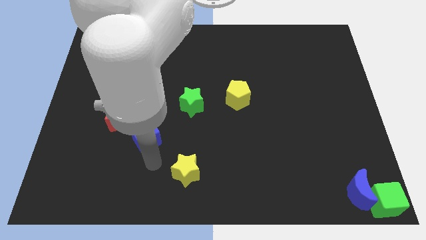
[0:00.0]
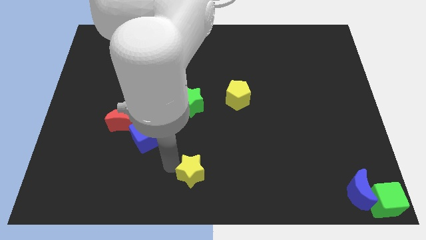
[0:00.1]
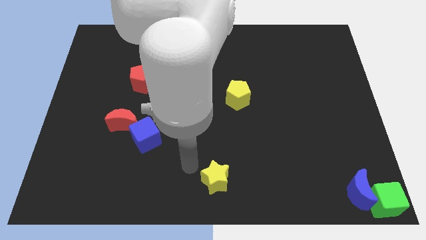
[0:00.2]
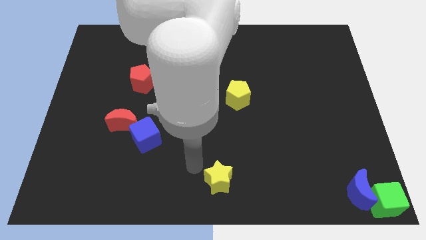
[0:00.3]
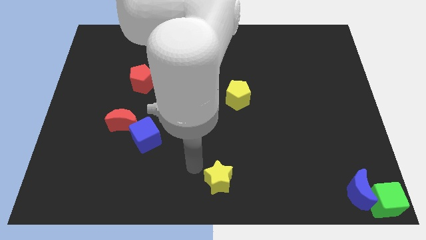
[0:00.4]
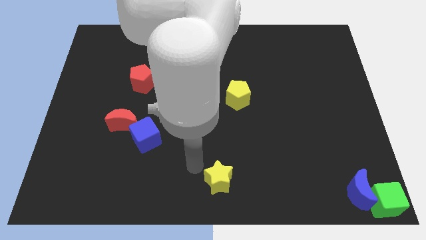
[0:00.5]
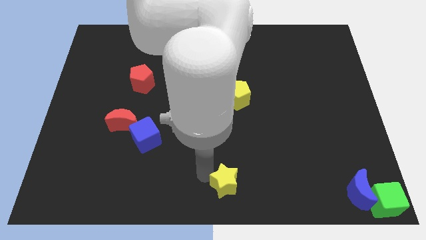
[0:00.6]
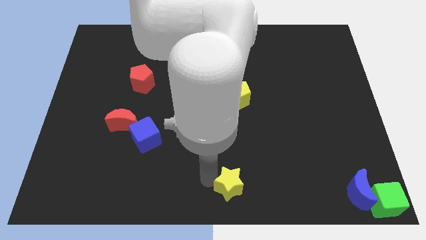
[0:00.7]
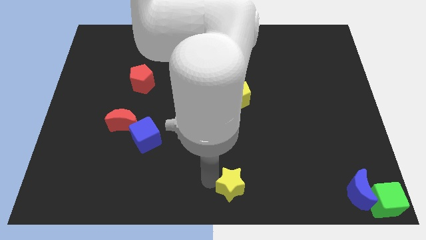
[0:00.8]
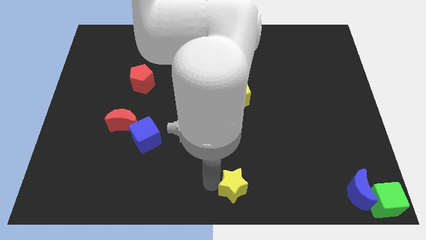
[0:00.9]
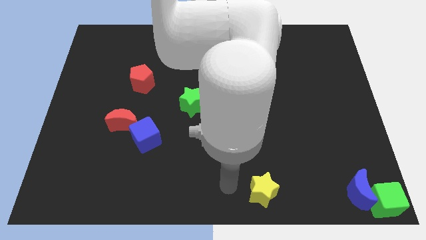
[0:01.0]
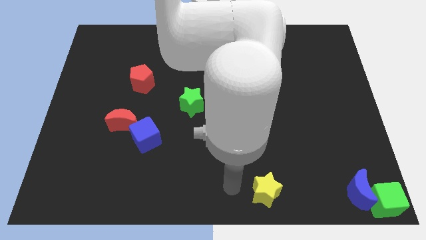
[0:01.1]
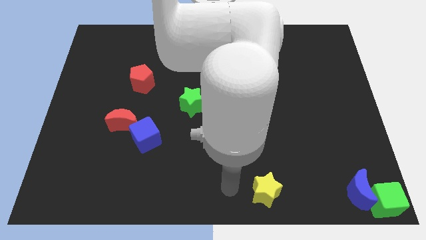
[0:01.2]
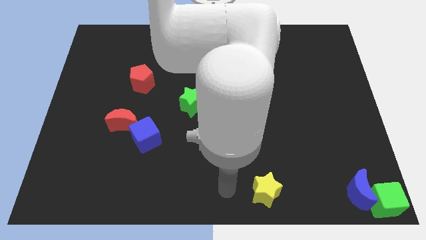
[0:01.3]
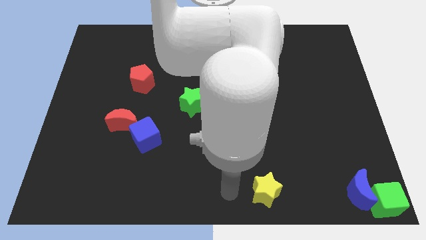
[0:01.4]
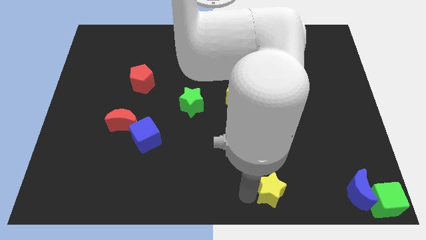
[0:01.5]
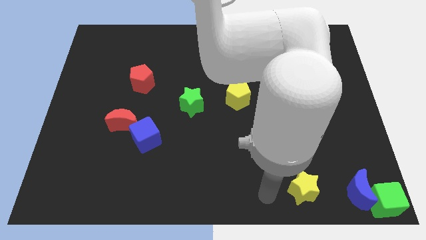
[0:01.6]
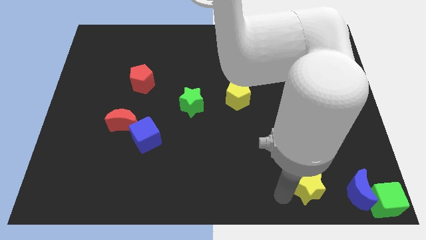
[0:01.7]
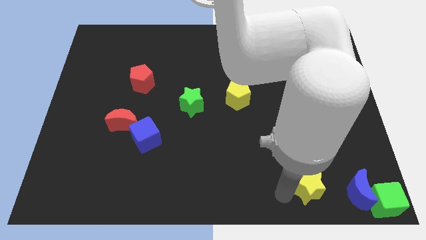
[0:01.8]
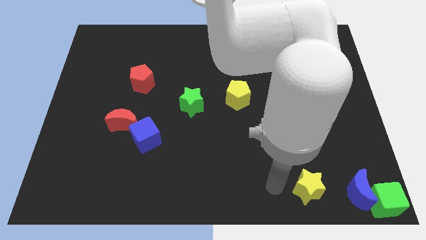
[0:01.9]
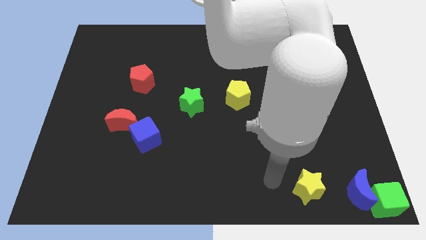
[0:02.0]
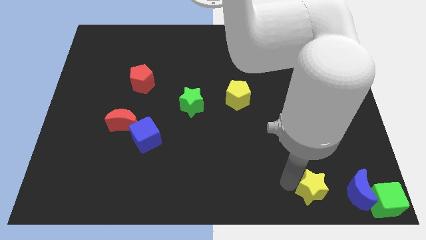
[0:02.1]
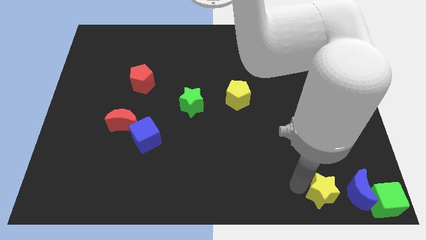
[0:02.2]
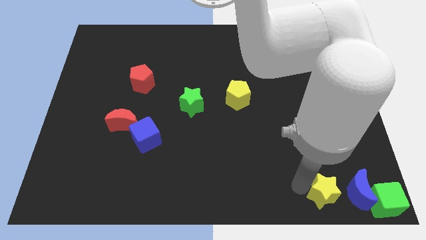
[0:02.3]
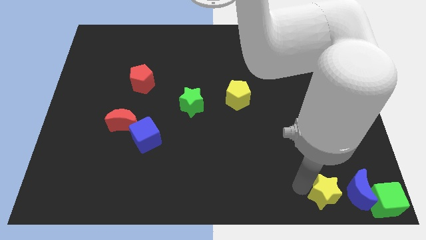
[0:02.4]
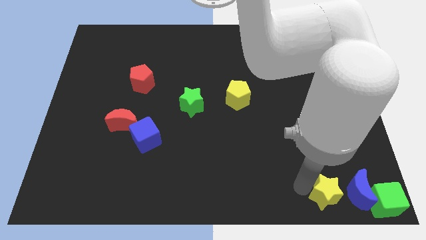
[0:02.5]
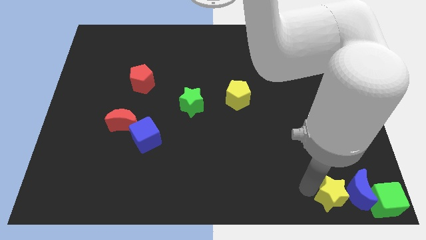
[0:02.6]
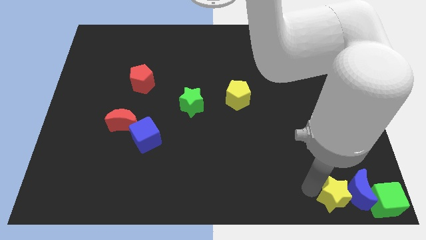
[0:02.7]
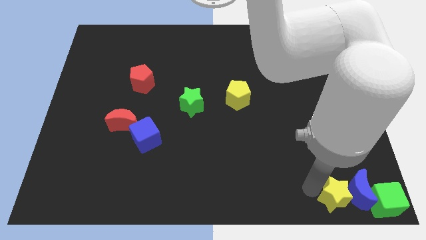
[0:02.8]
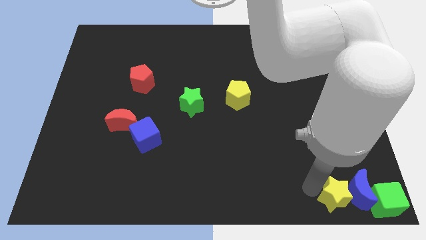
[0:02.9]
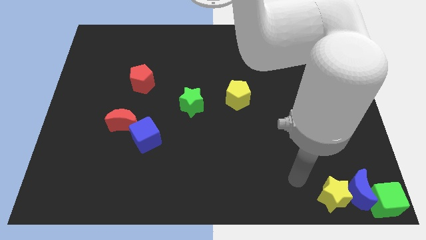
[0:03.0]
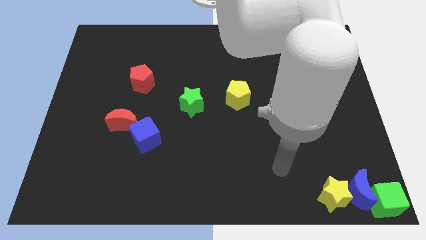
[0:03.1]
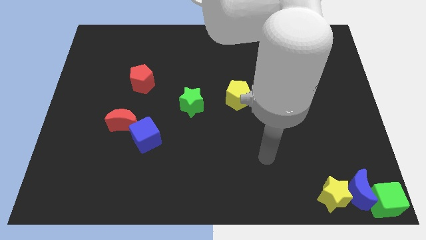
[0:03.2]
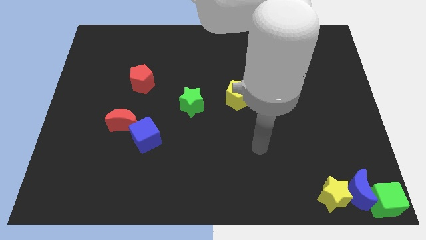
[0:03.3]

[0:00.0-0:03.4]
move the yellow star to the left of the blue crescent

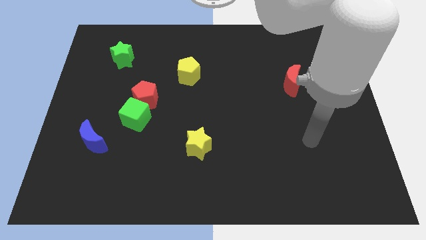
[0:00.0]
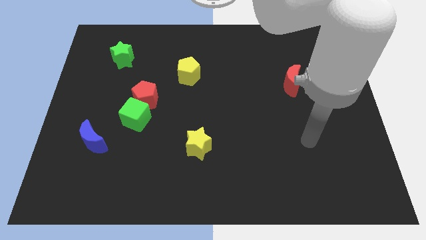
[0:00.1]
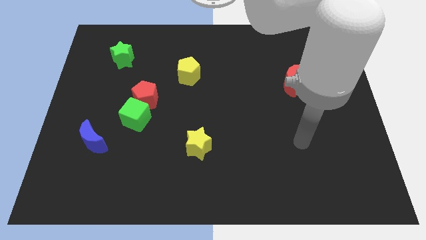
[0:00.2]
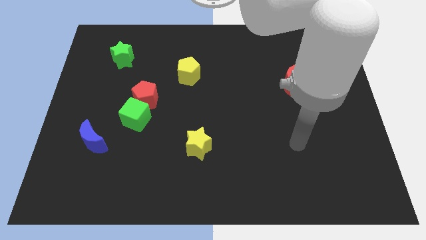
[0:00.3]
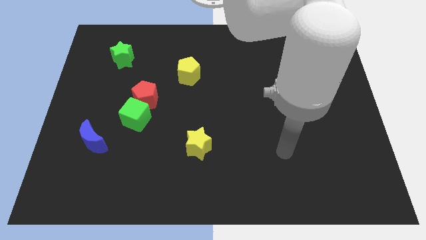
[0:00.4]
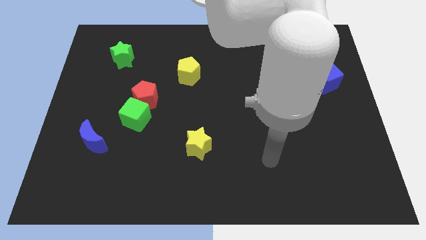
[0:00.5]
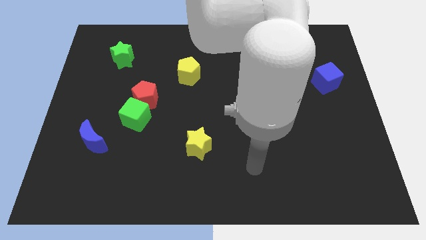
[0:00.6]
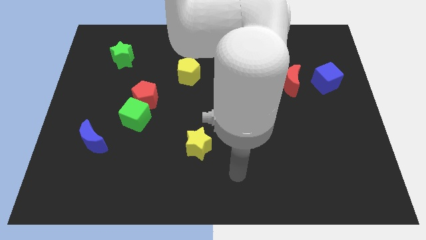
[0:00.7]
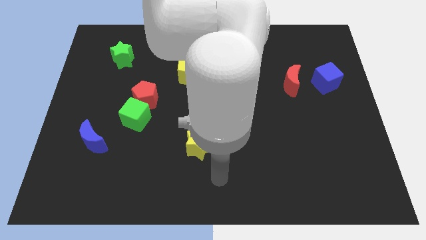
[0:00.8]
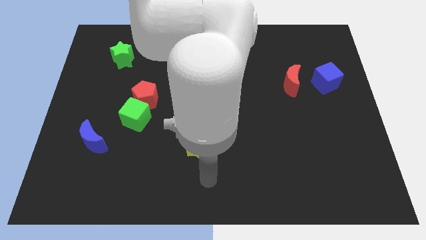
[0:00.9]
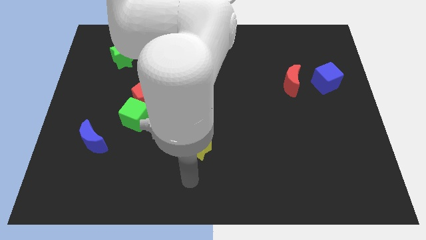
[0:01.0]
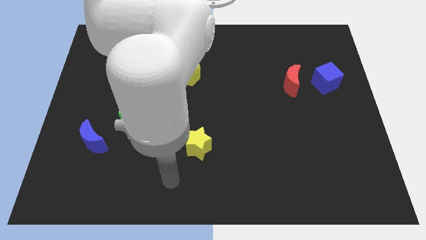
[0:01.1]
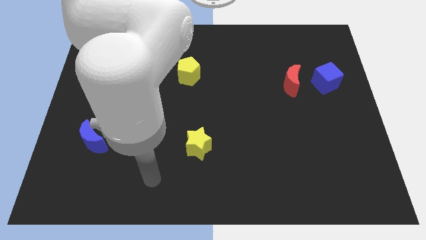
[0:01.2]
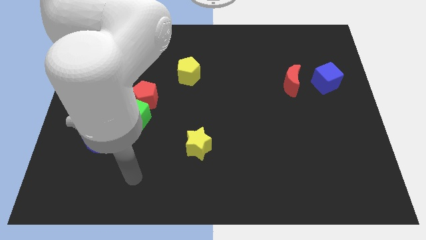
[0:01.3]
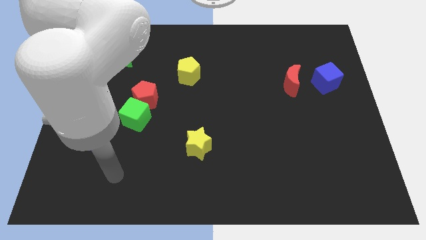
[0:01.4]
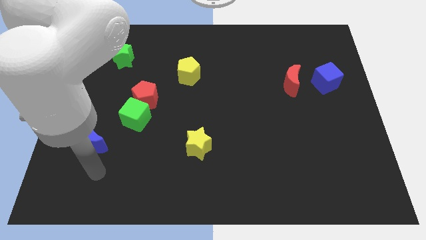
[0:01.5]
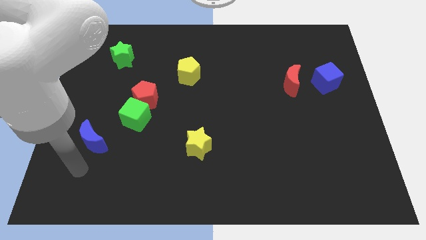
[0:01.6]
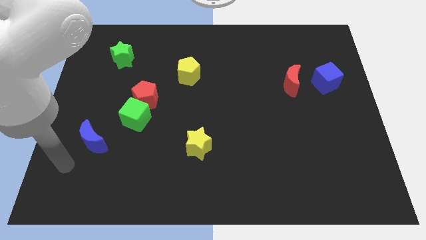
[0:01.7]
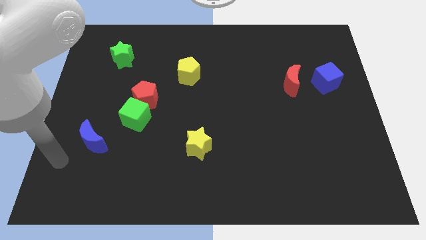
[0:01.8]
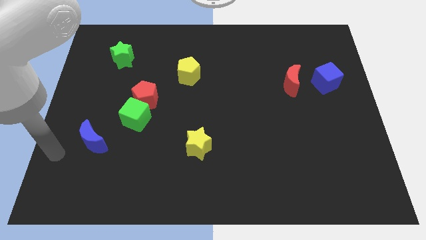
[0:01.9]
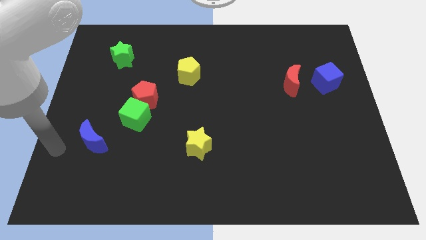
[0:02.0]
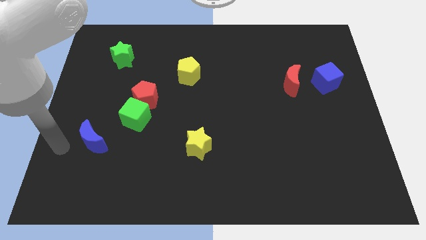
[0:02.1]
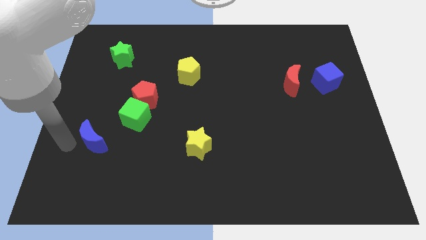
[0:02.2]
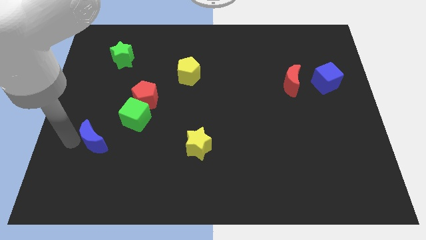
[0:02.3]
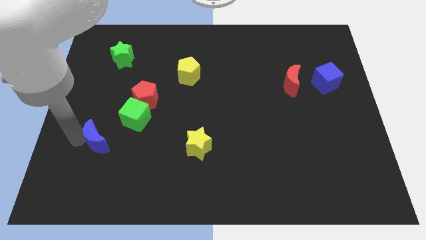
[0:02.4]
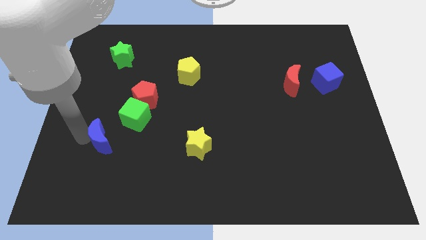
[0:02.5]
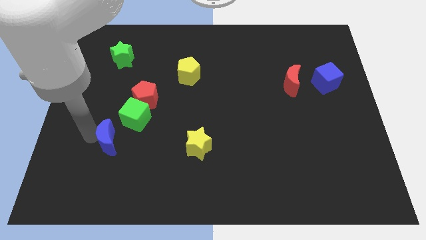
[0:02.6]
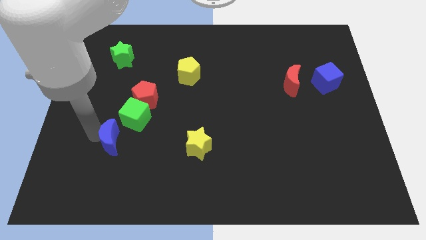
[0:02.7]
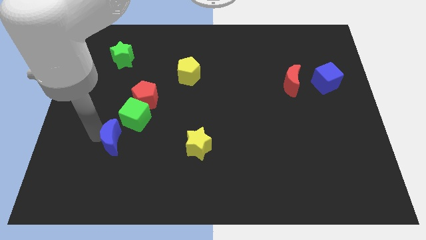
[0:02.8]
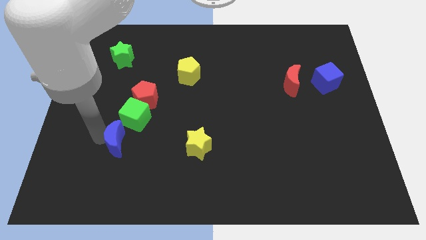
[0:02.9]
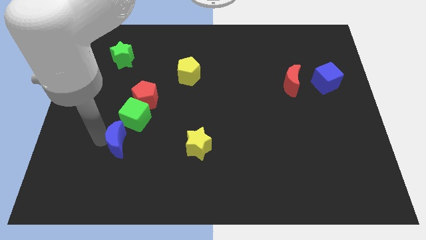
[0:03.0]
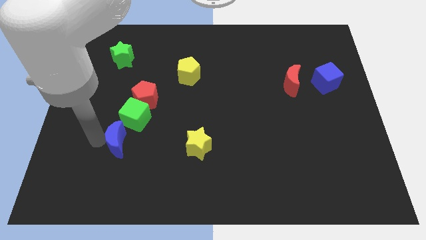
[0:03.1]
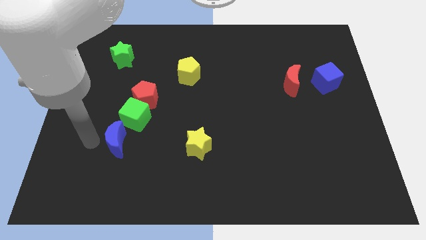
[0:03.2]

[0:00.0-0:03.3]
place the blue moon close to the green cube

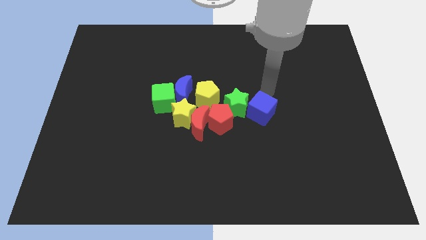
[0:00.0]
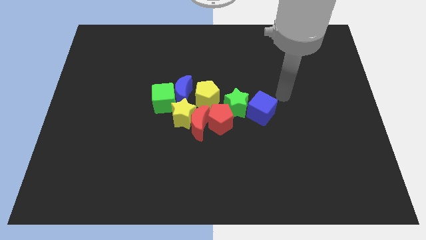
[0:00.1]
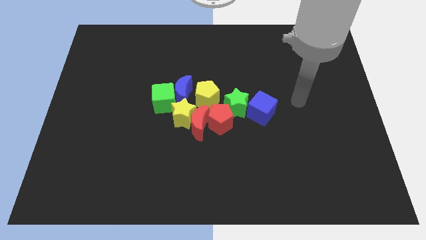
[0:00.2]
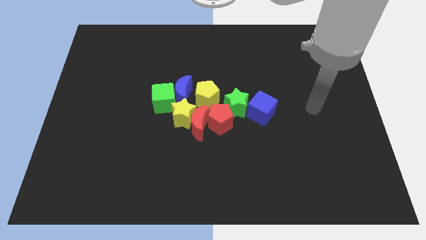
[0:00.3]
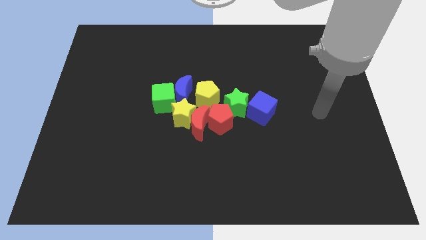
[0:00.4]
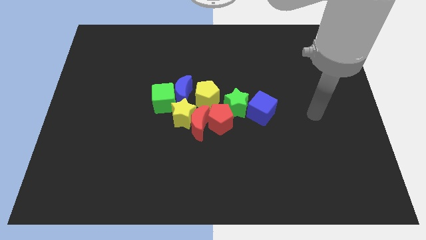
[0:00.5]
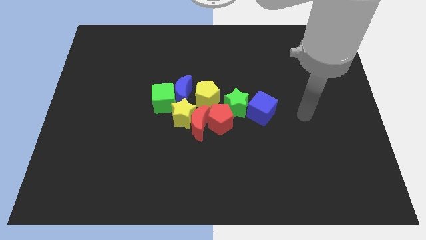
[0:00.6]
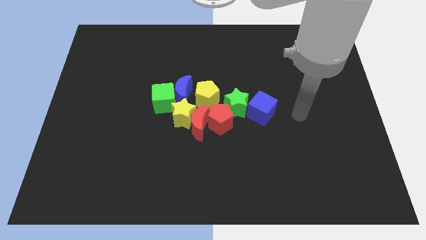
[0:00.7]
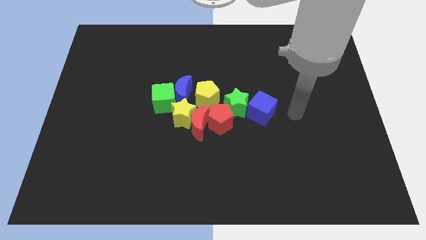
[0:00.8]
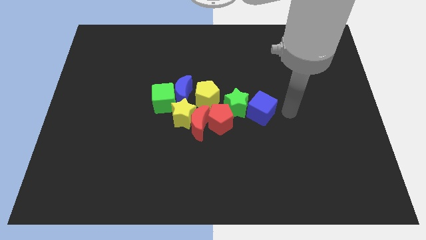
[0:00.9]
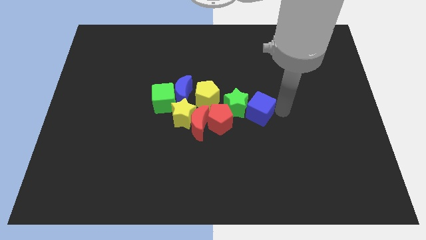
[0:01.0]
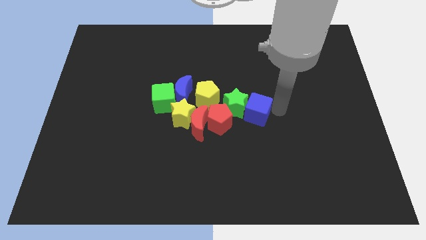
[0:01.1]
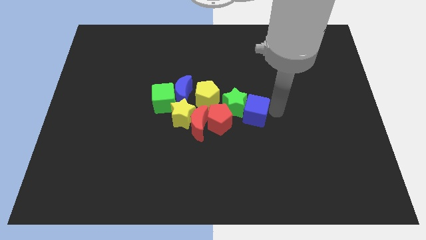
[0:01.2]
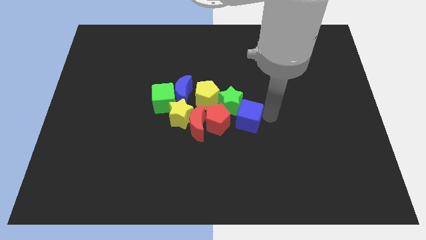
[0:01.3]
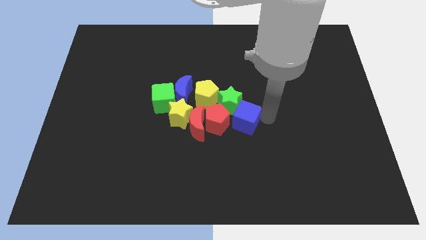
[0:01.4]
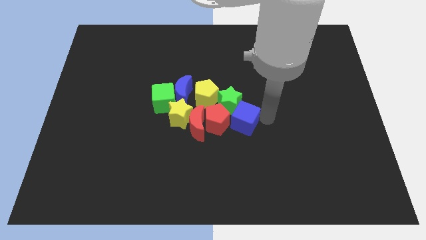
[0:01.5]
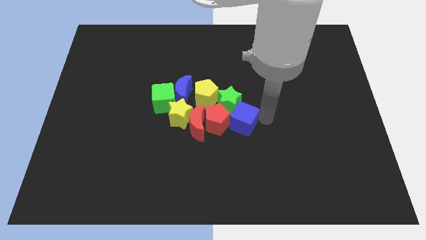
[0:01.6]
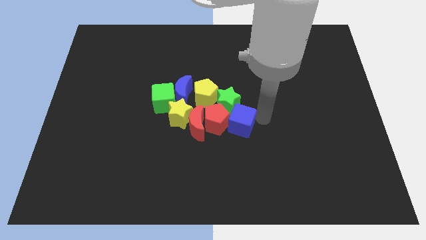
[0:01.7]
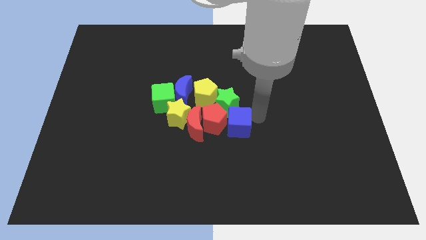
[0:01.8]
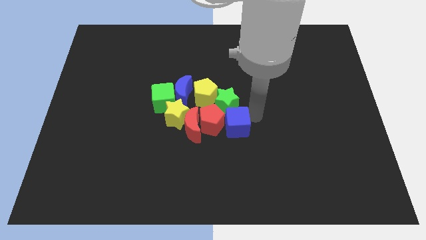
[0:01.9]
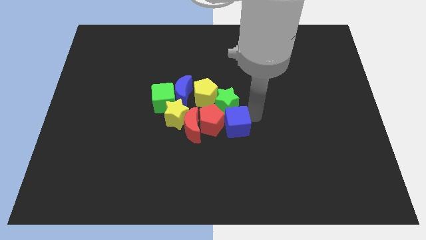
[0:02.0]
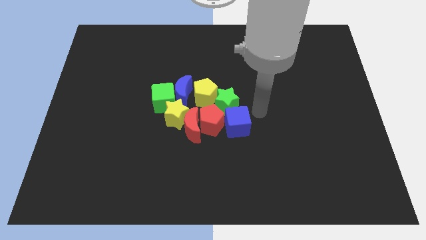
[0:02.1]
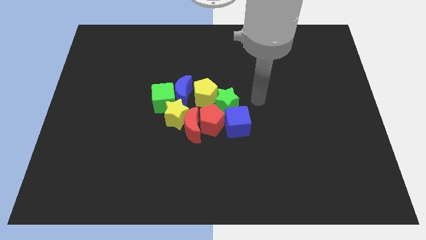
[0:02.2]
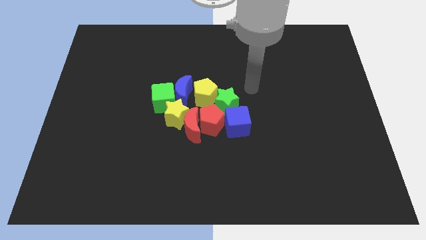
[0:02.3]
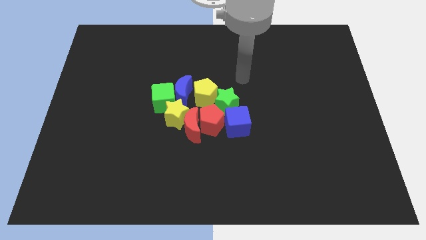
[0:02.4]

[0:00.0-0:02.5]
move the blue cube to the right side of the red pentagon
